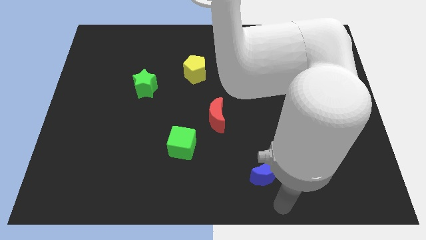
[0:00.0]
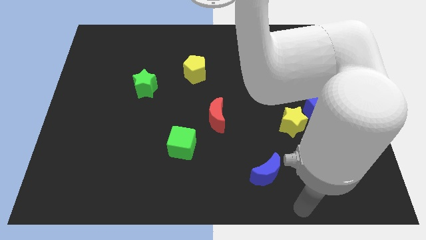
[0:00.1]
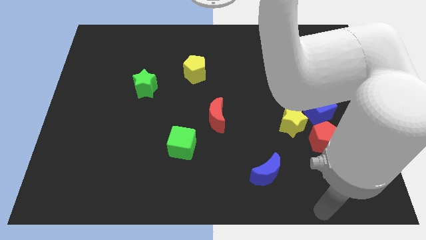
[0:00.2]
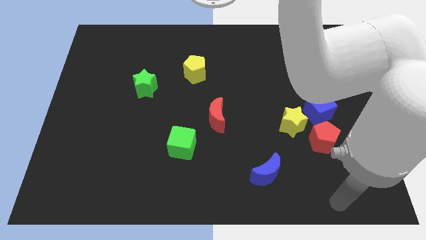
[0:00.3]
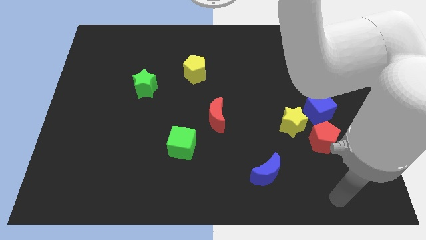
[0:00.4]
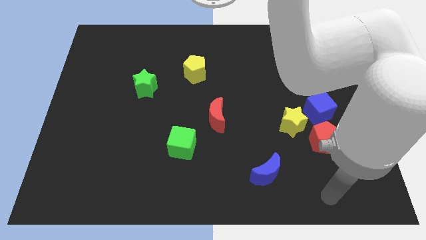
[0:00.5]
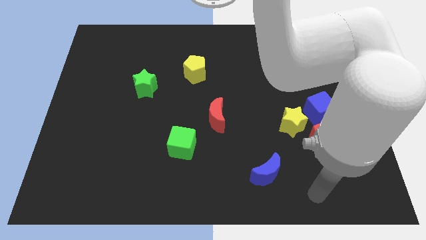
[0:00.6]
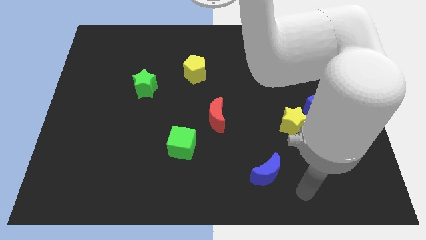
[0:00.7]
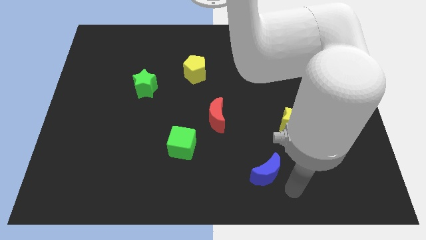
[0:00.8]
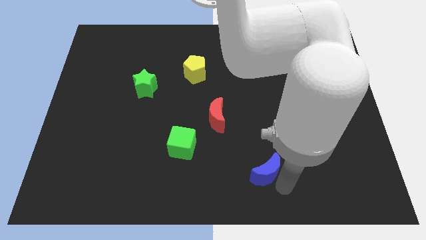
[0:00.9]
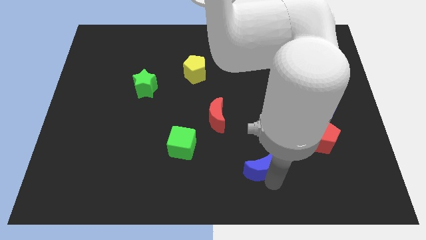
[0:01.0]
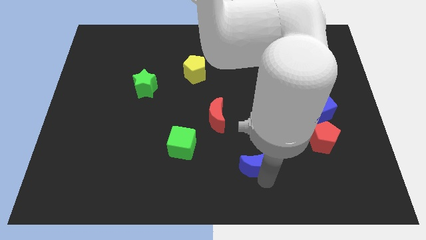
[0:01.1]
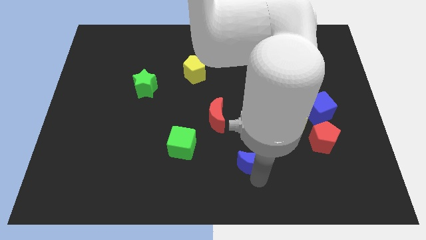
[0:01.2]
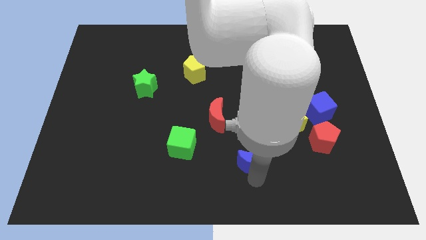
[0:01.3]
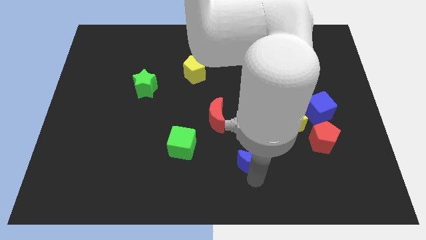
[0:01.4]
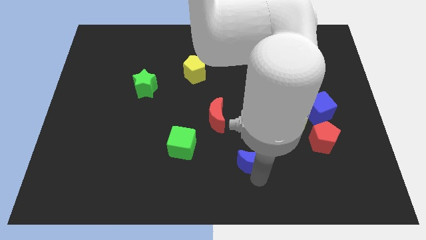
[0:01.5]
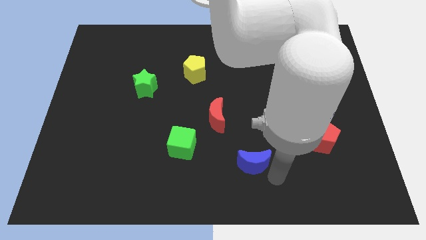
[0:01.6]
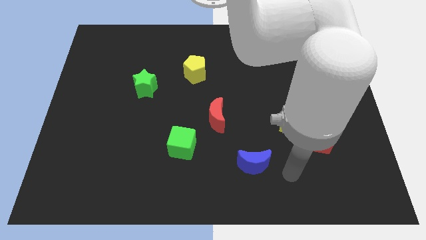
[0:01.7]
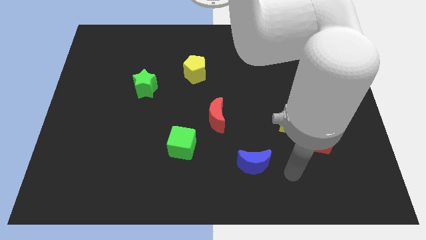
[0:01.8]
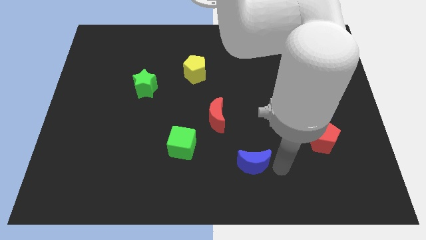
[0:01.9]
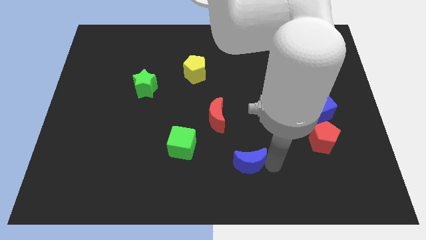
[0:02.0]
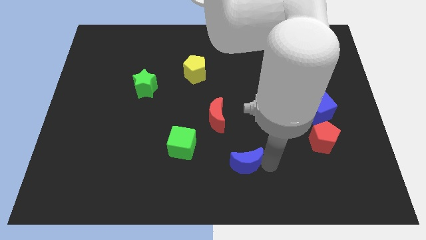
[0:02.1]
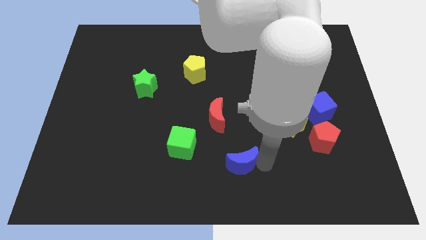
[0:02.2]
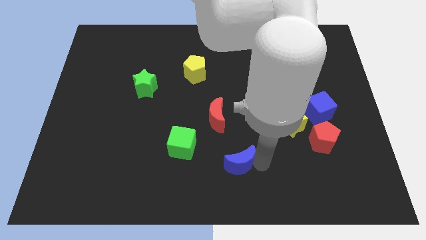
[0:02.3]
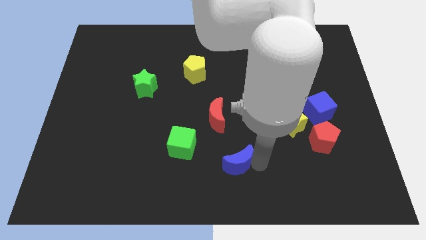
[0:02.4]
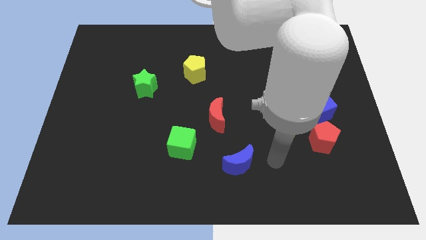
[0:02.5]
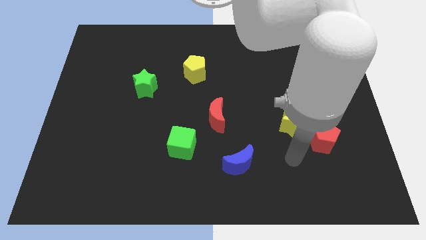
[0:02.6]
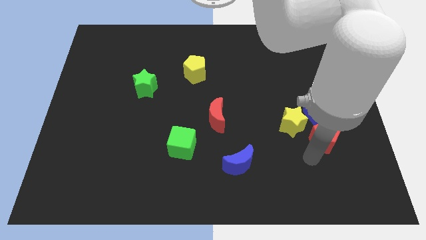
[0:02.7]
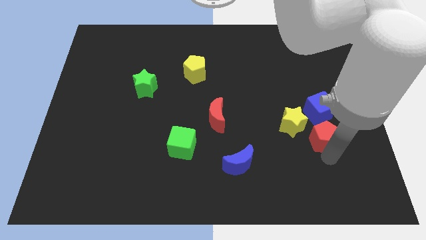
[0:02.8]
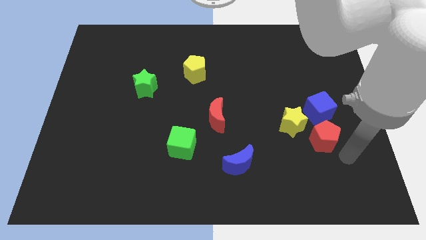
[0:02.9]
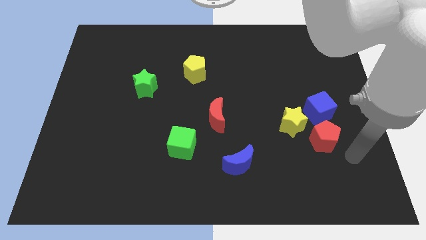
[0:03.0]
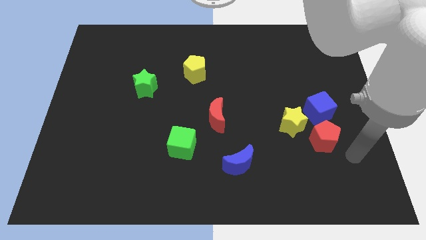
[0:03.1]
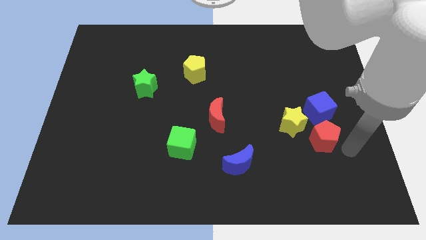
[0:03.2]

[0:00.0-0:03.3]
place blue moon to the bottom of the red moon

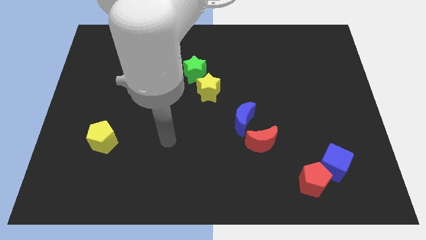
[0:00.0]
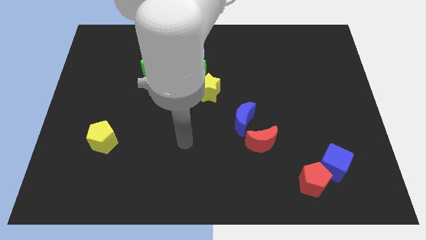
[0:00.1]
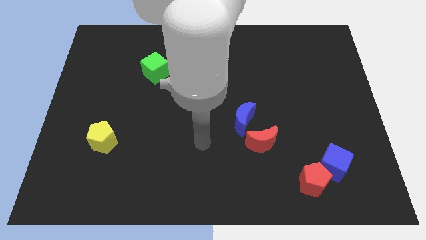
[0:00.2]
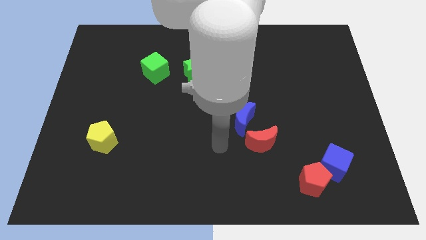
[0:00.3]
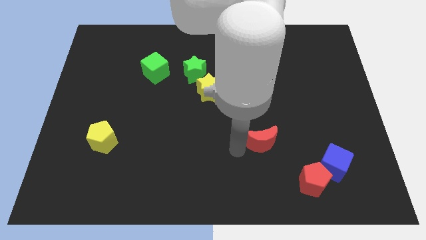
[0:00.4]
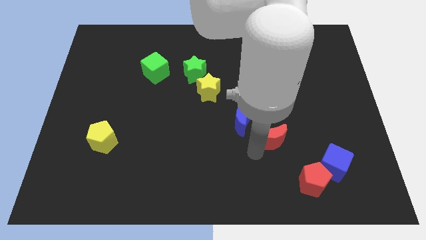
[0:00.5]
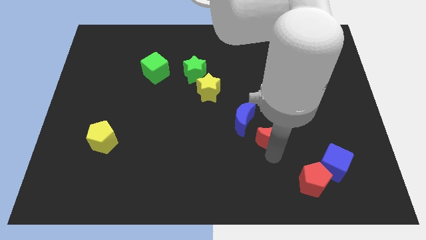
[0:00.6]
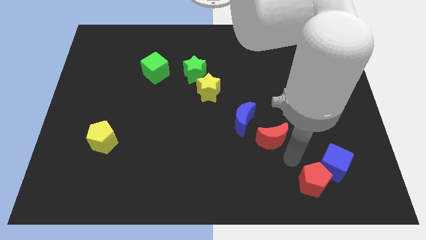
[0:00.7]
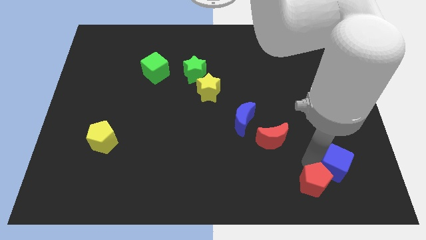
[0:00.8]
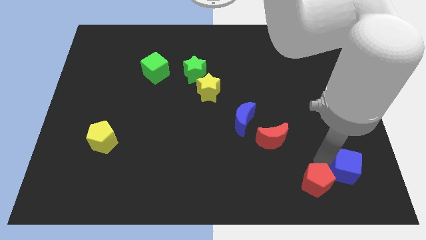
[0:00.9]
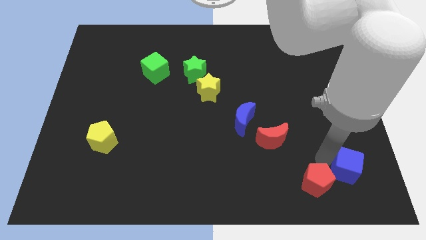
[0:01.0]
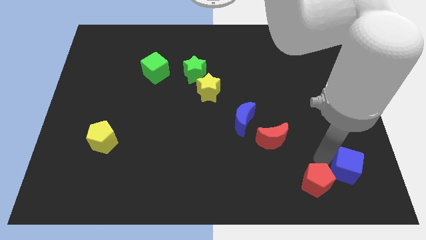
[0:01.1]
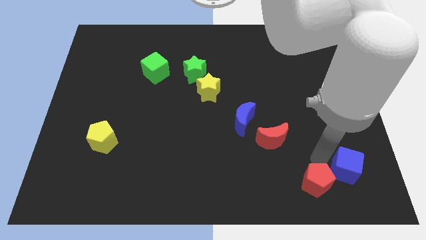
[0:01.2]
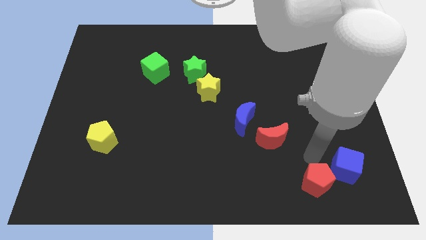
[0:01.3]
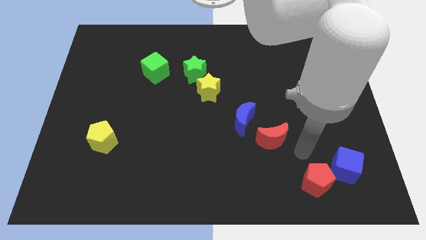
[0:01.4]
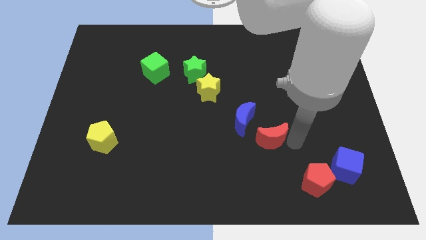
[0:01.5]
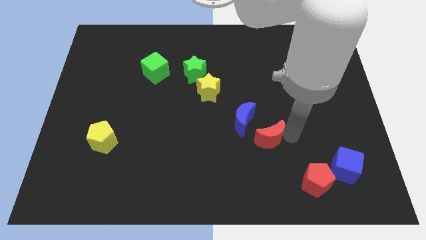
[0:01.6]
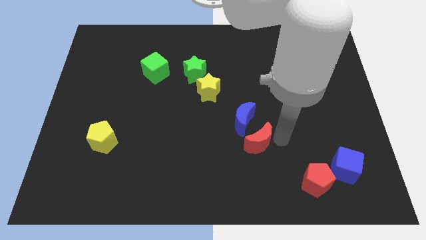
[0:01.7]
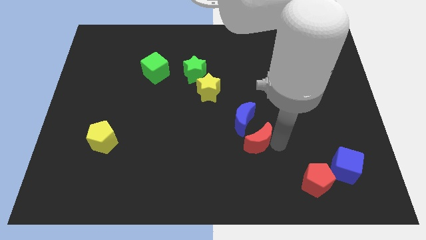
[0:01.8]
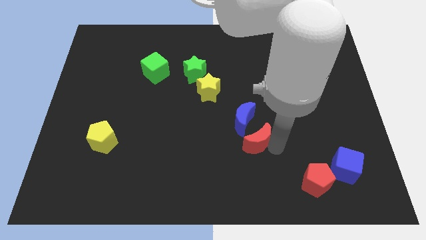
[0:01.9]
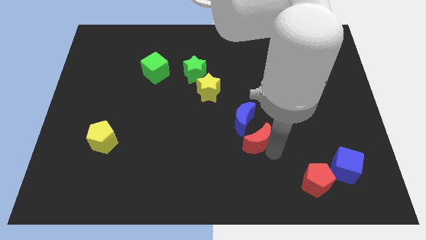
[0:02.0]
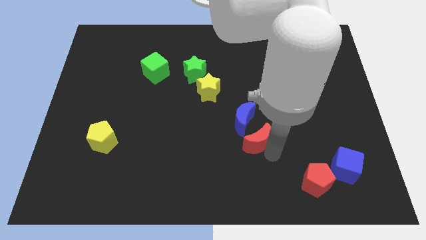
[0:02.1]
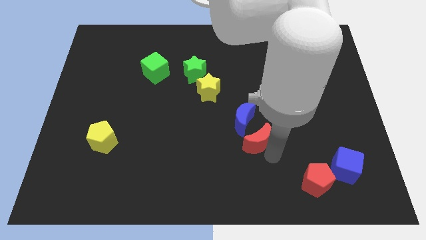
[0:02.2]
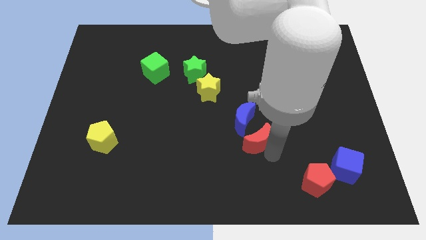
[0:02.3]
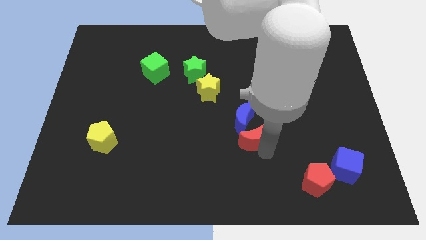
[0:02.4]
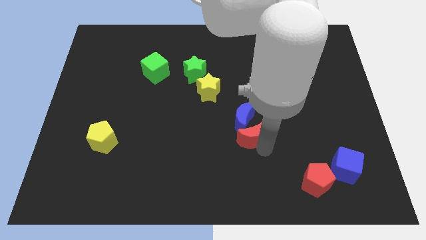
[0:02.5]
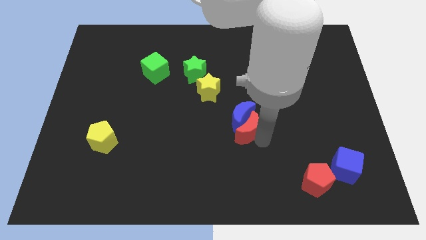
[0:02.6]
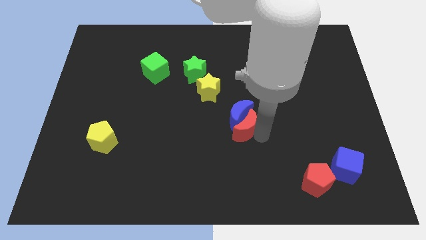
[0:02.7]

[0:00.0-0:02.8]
push the blue cube and move the red moon into blue moon

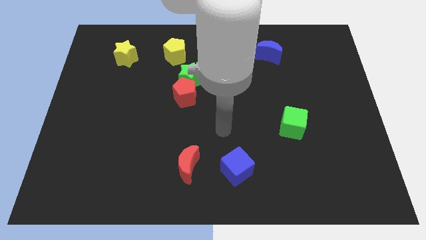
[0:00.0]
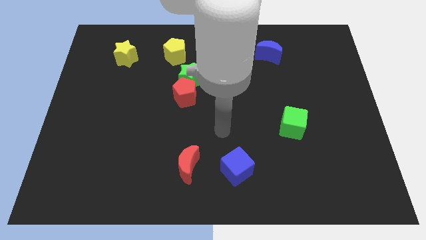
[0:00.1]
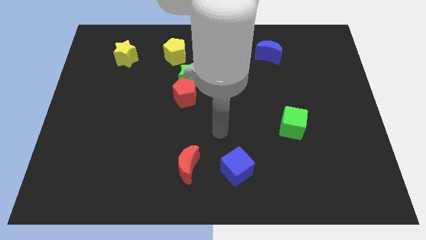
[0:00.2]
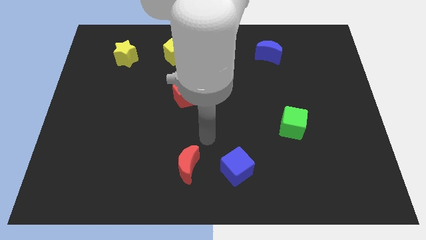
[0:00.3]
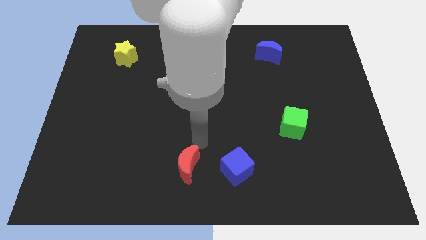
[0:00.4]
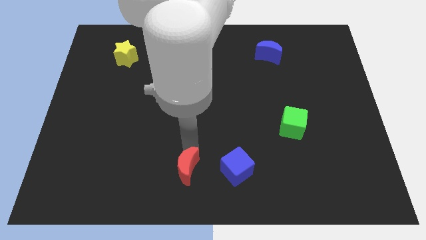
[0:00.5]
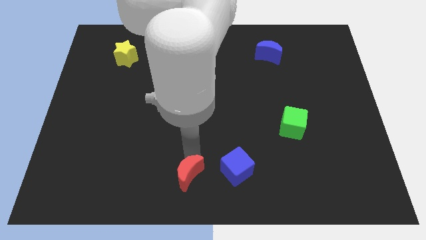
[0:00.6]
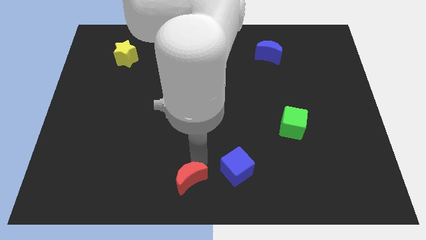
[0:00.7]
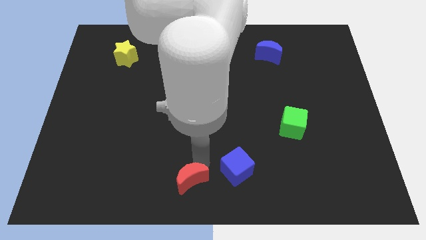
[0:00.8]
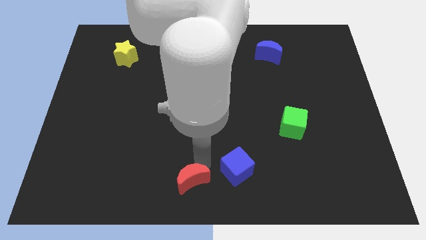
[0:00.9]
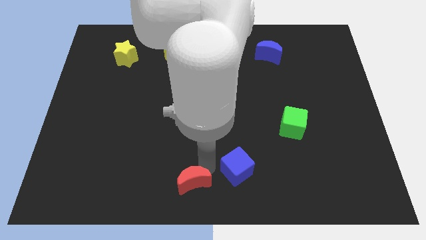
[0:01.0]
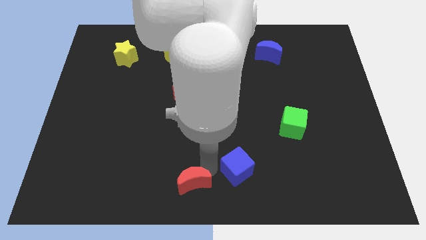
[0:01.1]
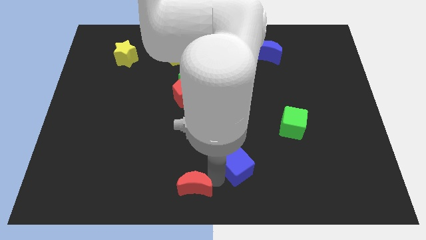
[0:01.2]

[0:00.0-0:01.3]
move the red crescent slightly to the down

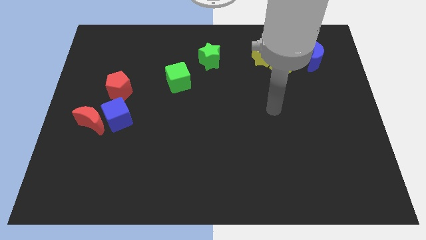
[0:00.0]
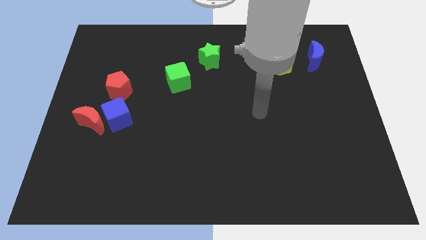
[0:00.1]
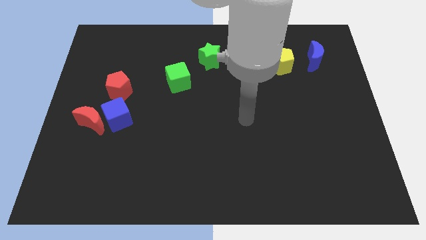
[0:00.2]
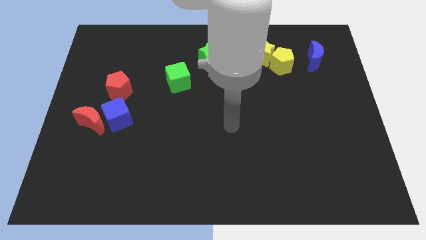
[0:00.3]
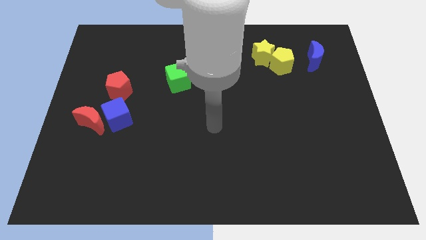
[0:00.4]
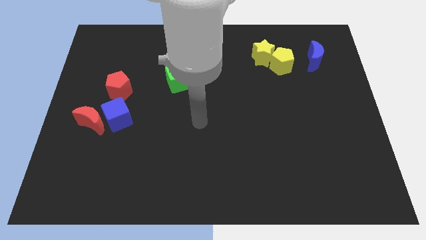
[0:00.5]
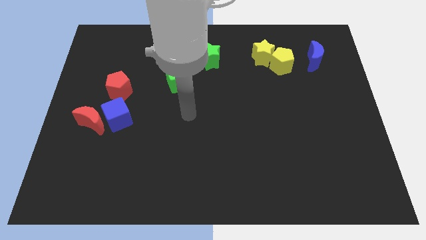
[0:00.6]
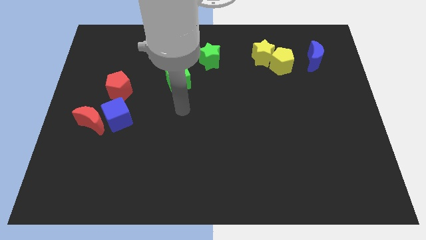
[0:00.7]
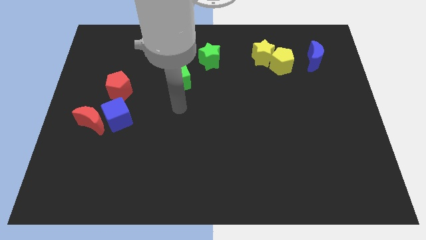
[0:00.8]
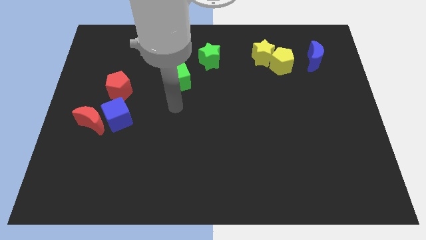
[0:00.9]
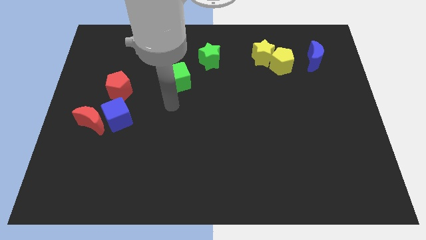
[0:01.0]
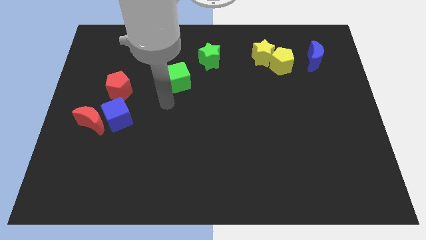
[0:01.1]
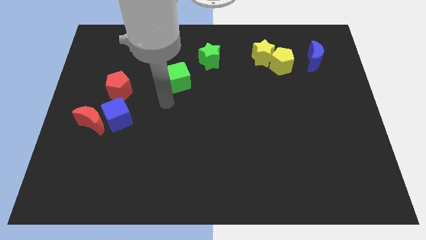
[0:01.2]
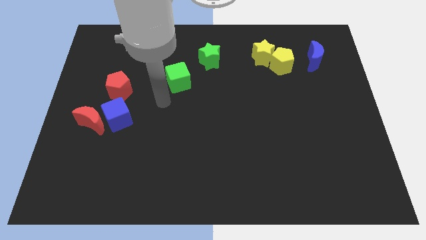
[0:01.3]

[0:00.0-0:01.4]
move your arm towards the green cube

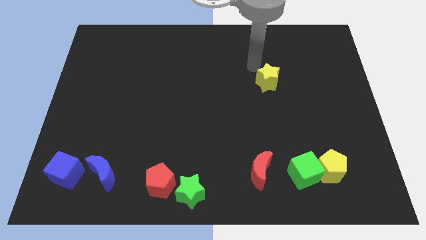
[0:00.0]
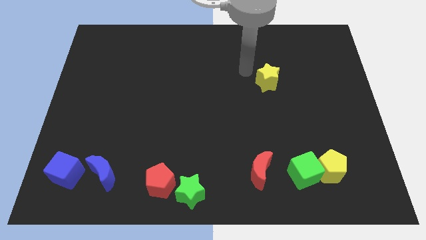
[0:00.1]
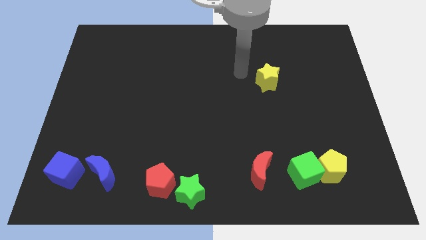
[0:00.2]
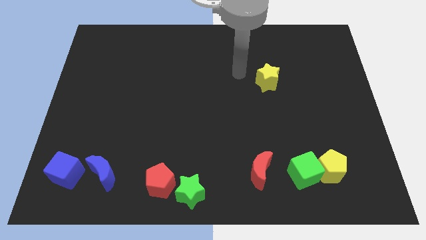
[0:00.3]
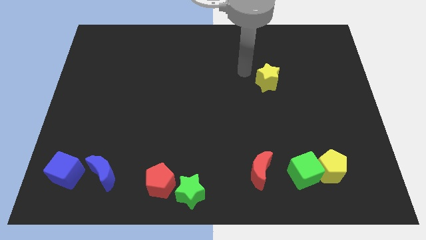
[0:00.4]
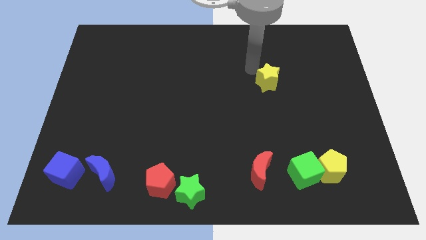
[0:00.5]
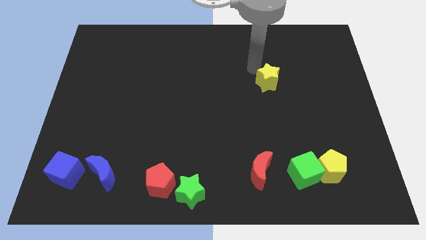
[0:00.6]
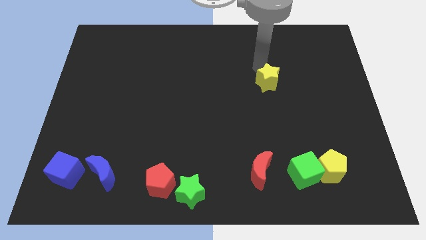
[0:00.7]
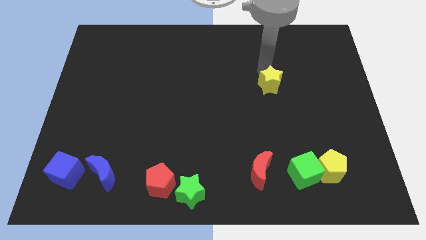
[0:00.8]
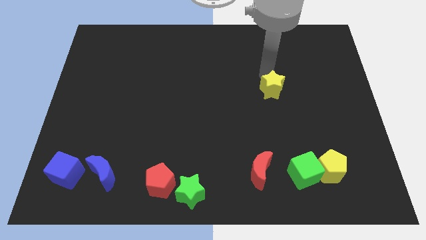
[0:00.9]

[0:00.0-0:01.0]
slightly push the yellow star on the board
